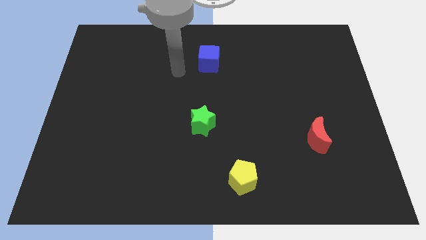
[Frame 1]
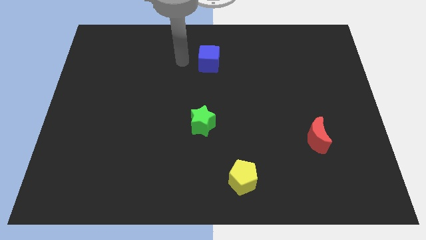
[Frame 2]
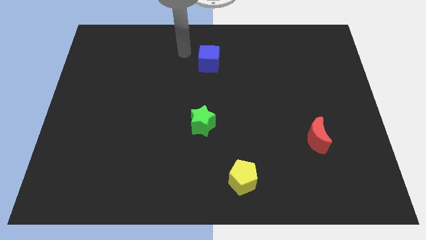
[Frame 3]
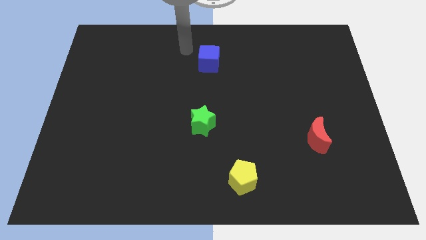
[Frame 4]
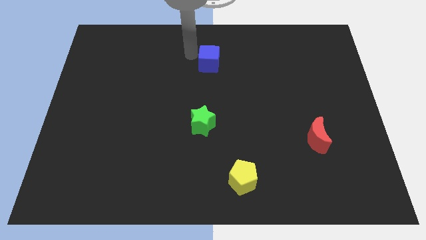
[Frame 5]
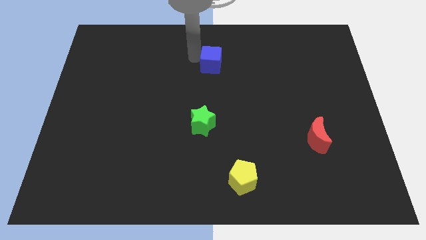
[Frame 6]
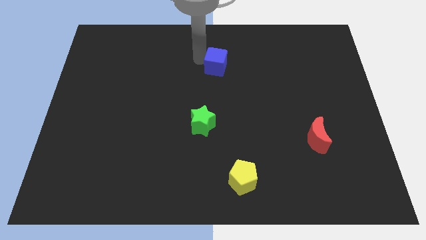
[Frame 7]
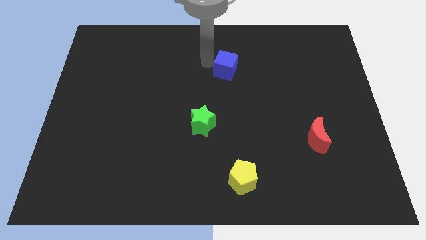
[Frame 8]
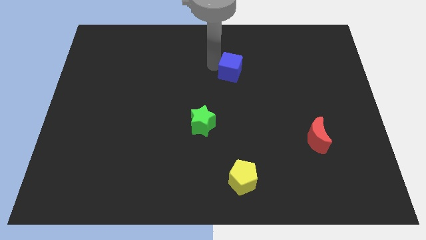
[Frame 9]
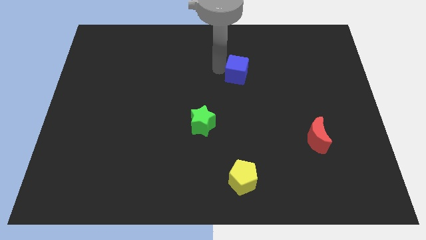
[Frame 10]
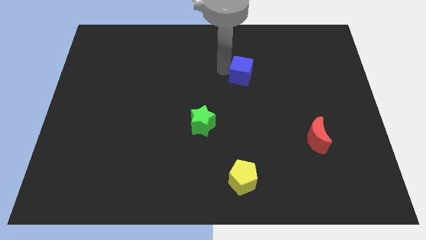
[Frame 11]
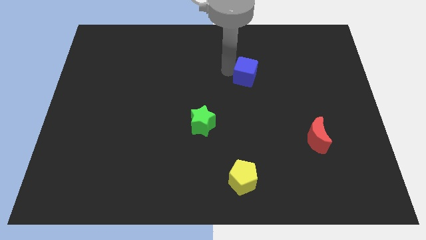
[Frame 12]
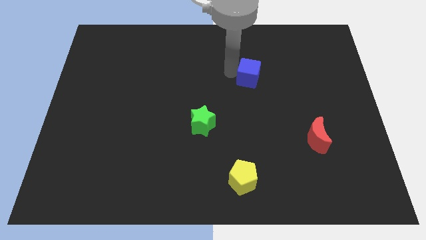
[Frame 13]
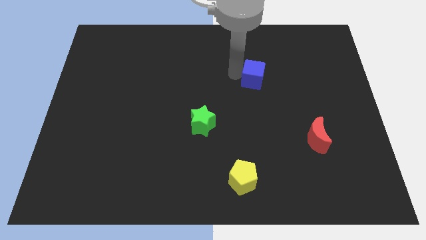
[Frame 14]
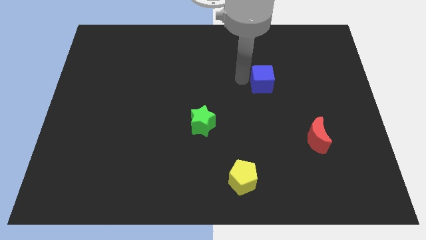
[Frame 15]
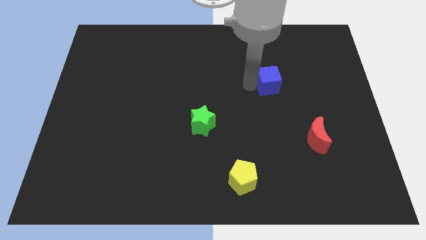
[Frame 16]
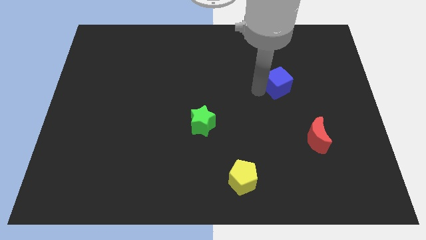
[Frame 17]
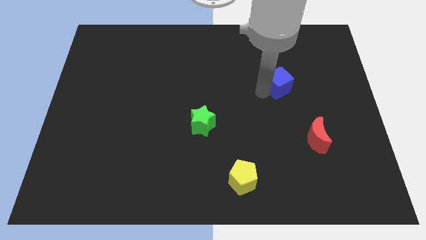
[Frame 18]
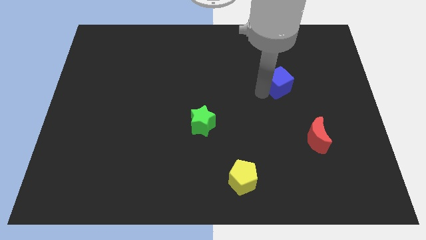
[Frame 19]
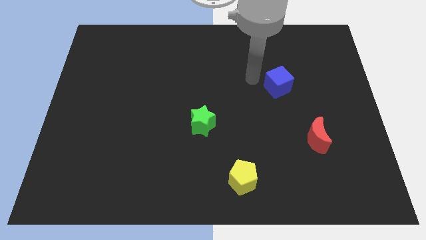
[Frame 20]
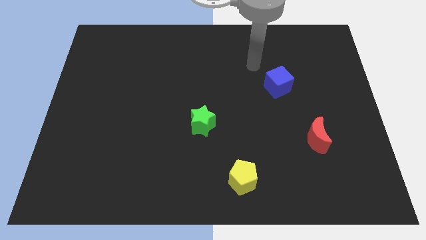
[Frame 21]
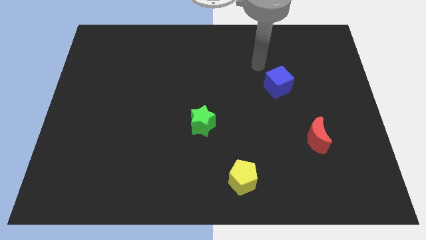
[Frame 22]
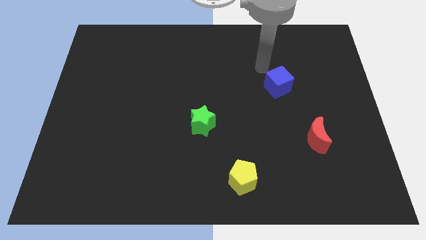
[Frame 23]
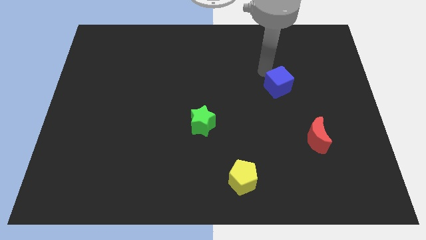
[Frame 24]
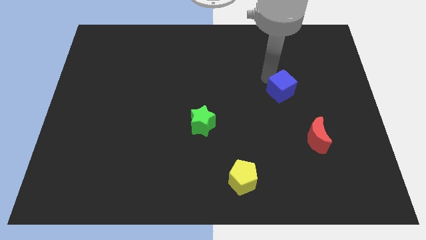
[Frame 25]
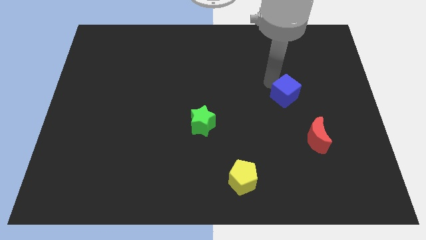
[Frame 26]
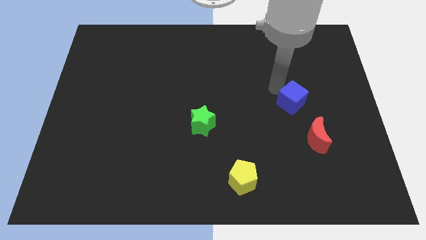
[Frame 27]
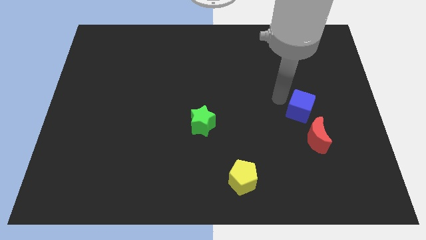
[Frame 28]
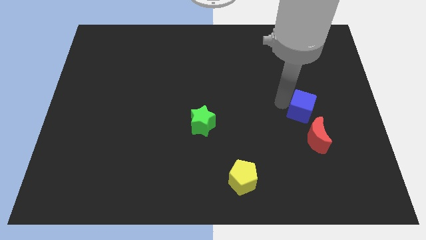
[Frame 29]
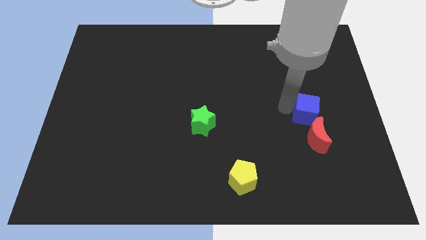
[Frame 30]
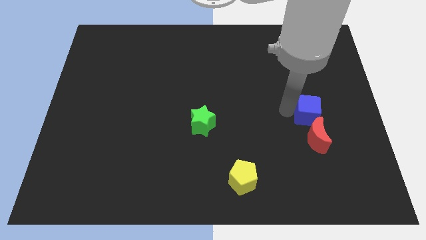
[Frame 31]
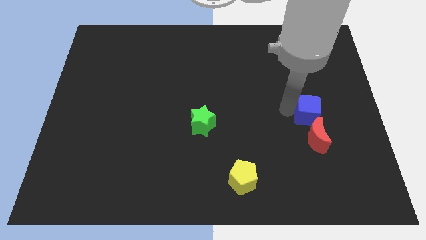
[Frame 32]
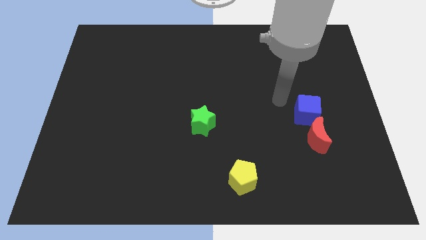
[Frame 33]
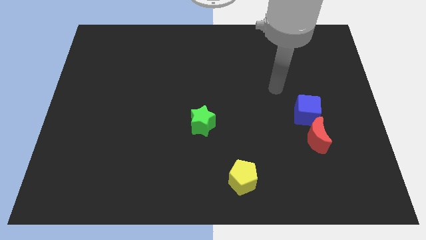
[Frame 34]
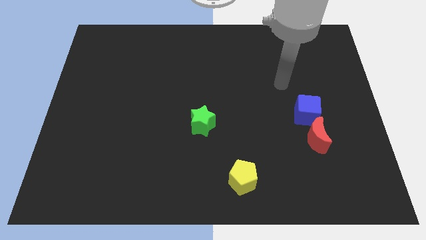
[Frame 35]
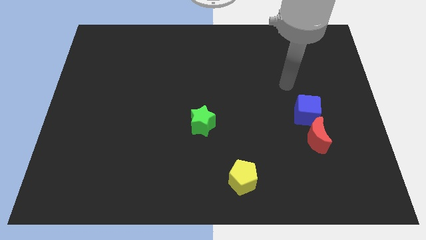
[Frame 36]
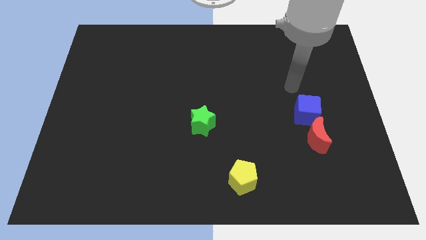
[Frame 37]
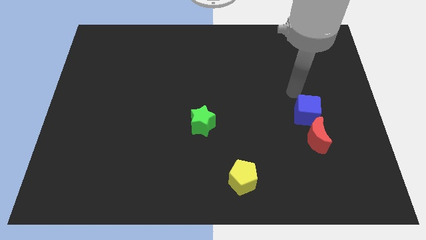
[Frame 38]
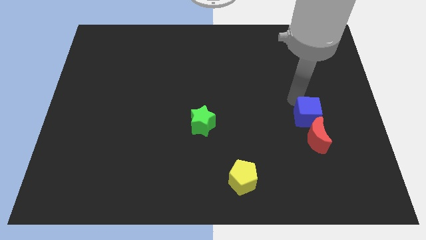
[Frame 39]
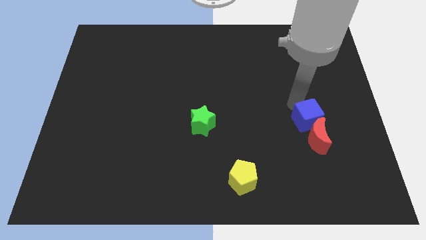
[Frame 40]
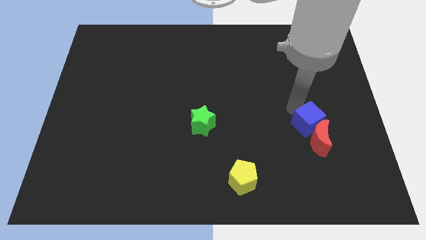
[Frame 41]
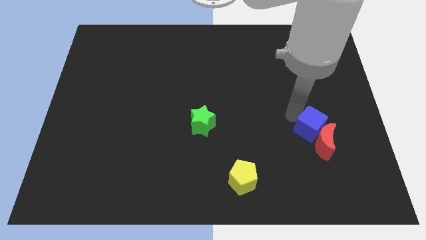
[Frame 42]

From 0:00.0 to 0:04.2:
move the blue cube next to the red block

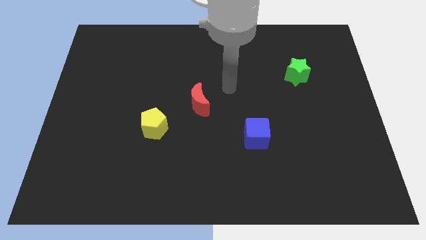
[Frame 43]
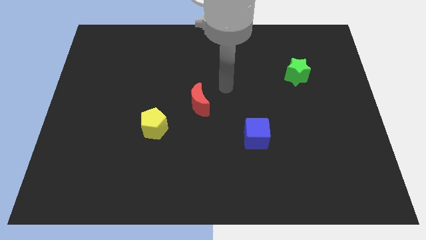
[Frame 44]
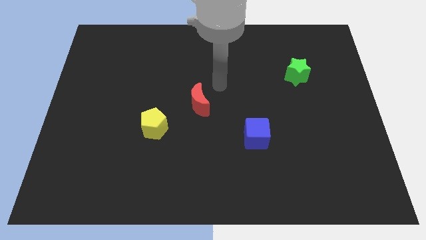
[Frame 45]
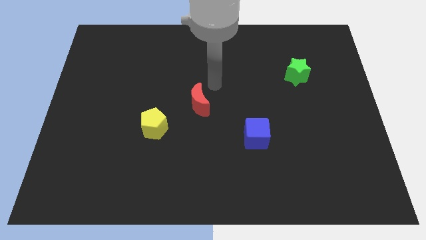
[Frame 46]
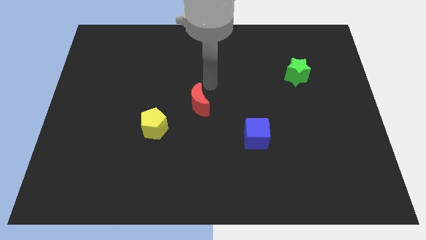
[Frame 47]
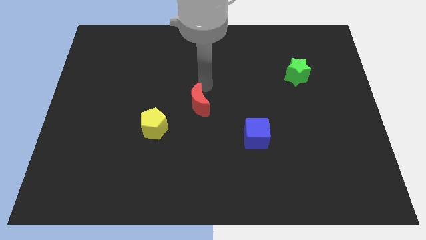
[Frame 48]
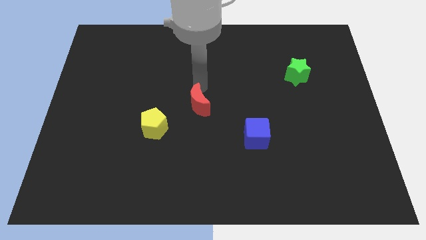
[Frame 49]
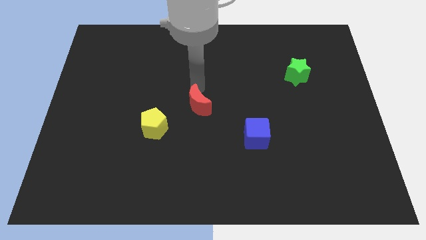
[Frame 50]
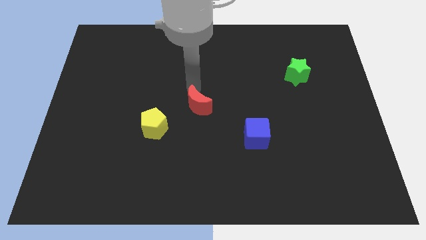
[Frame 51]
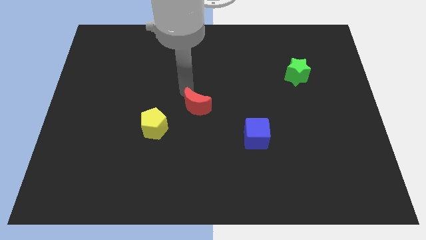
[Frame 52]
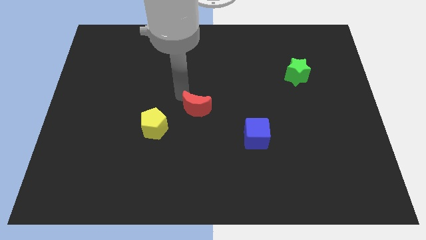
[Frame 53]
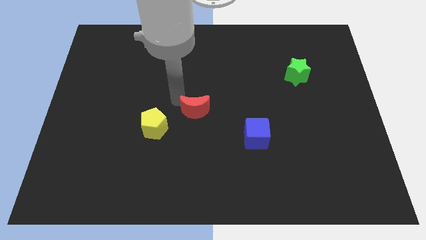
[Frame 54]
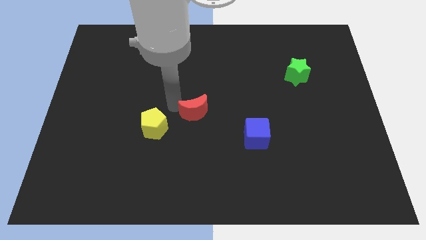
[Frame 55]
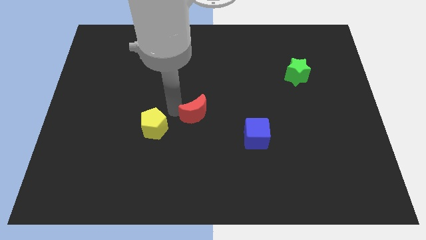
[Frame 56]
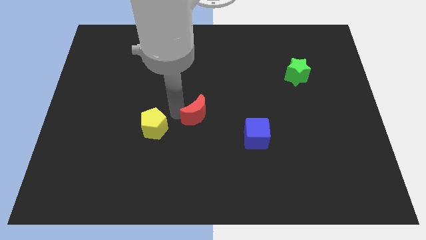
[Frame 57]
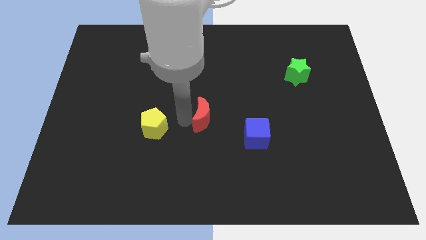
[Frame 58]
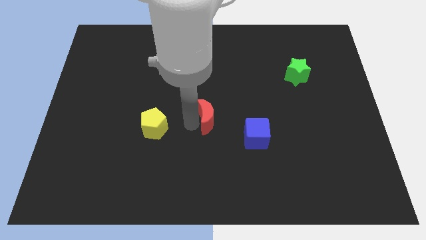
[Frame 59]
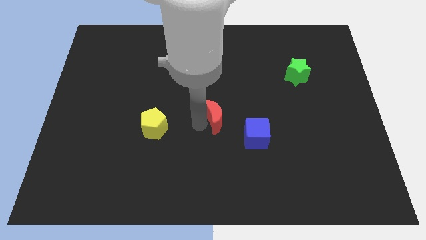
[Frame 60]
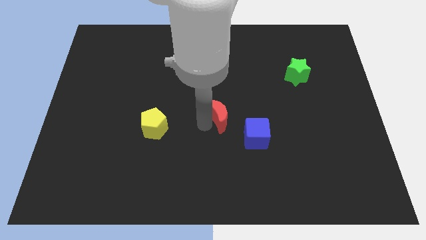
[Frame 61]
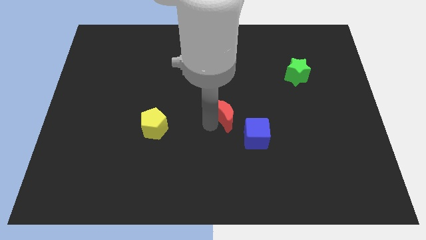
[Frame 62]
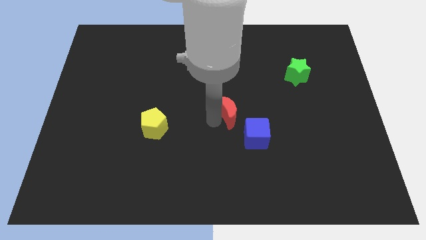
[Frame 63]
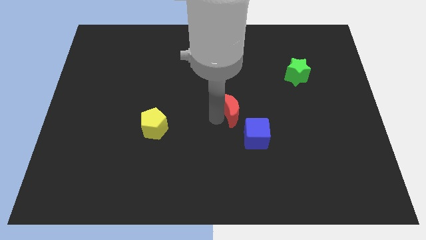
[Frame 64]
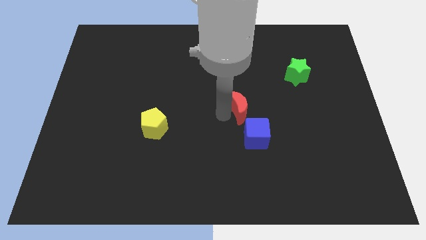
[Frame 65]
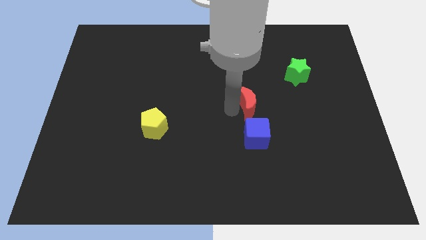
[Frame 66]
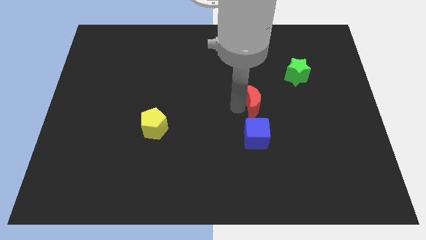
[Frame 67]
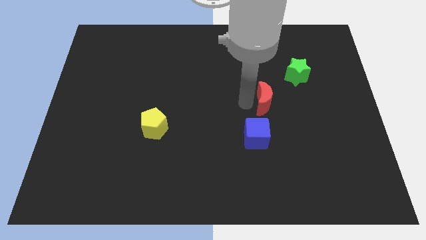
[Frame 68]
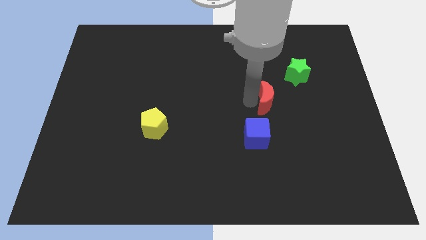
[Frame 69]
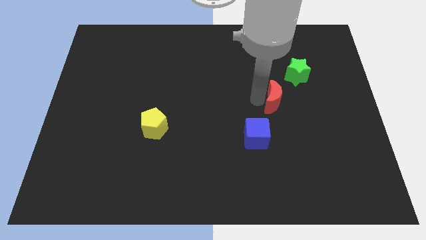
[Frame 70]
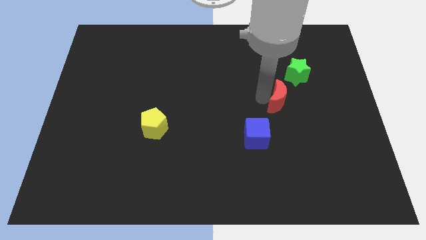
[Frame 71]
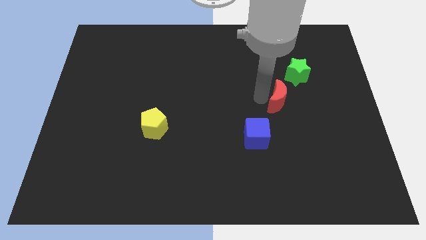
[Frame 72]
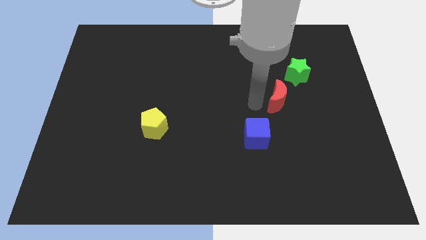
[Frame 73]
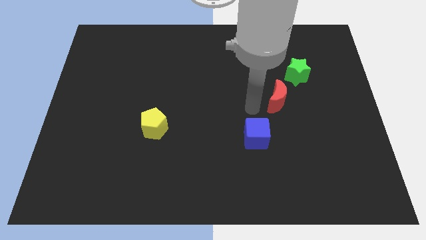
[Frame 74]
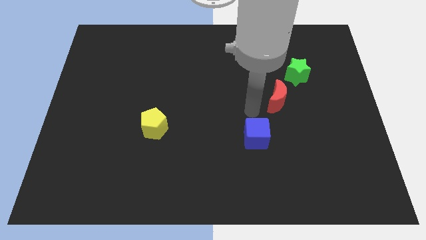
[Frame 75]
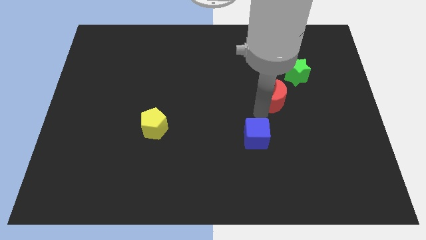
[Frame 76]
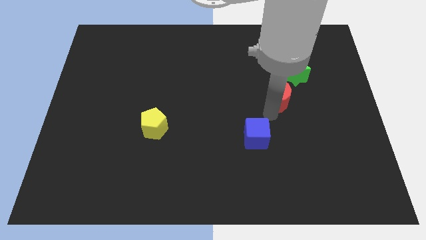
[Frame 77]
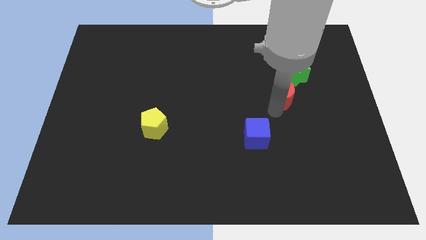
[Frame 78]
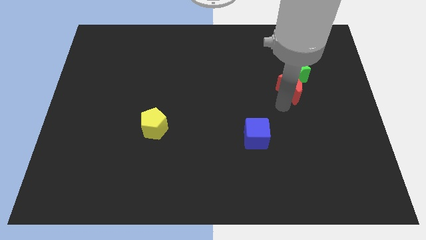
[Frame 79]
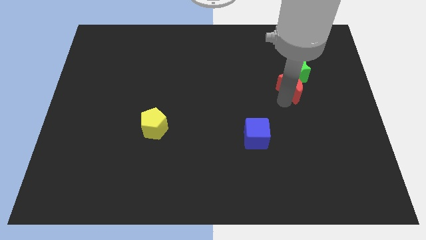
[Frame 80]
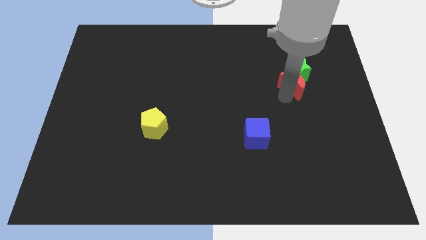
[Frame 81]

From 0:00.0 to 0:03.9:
push the red block to the star

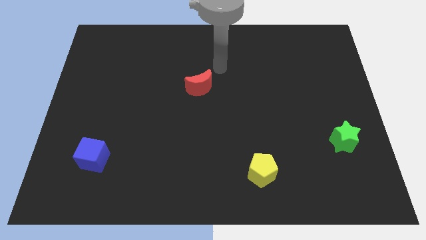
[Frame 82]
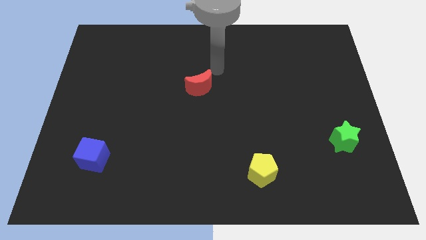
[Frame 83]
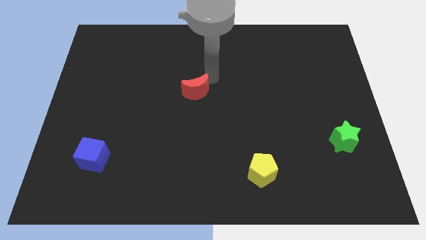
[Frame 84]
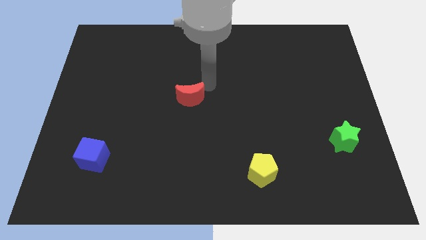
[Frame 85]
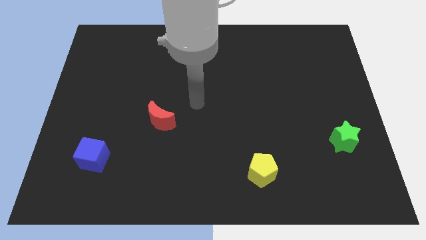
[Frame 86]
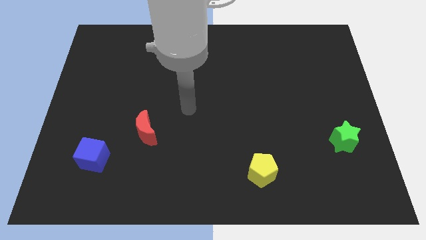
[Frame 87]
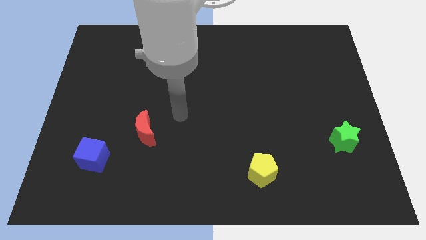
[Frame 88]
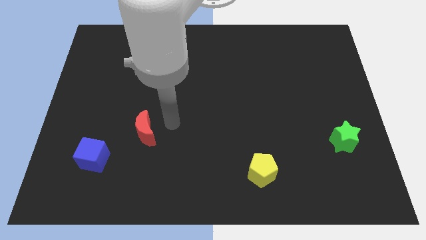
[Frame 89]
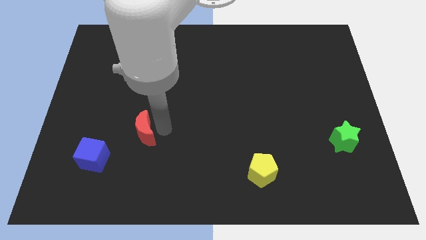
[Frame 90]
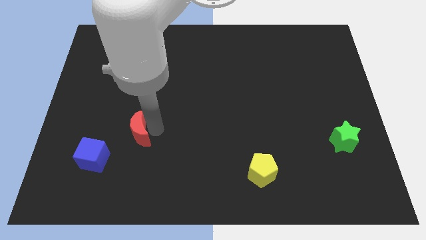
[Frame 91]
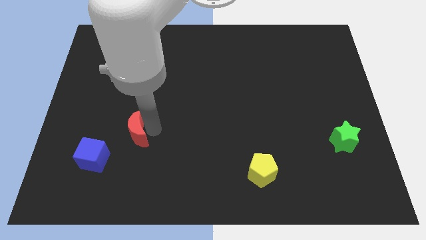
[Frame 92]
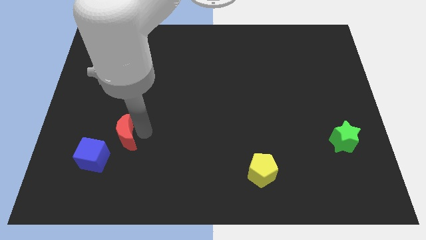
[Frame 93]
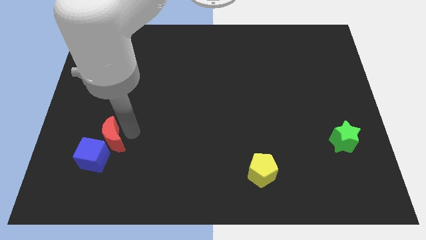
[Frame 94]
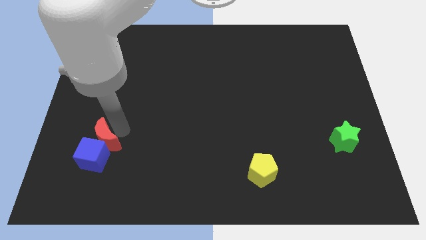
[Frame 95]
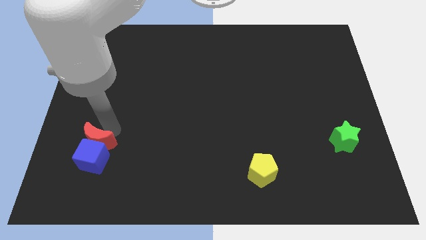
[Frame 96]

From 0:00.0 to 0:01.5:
push the red moon to the cube
